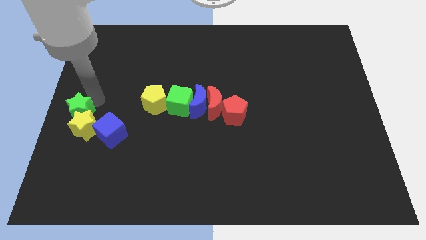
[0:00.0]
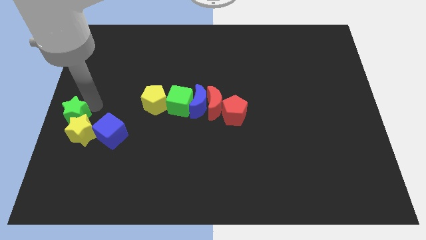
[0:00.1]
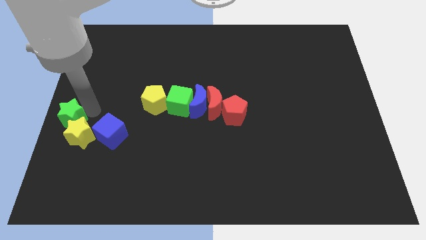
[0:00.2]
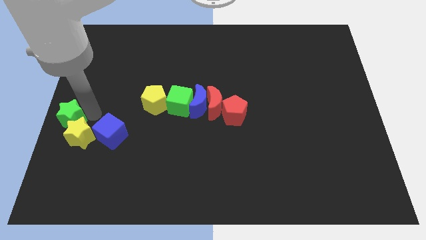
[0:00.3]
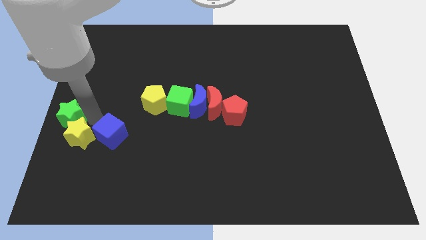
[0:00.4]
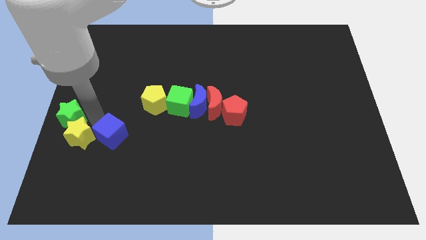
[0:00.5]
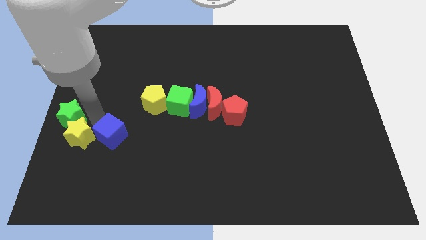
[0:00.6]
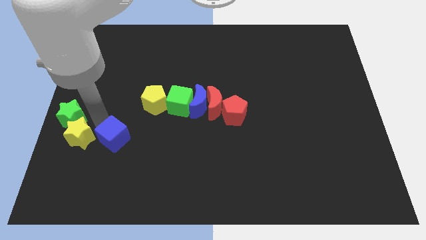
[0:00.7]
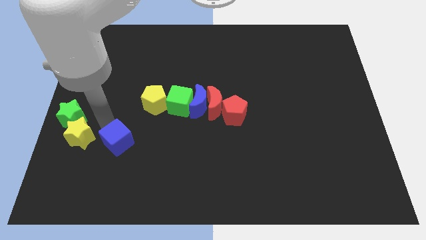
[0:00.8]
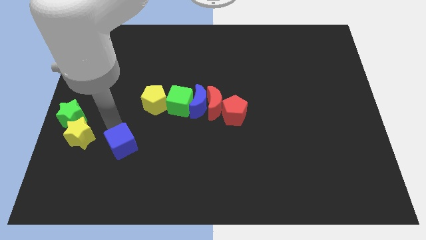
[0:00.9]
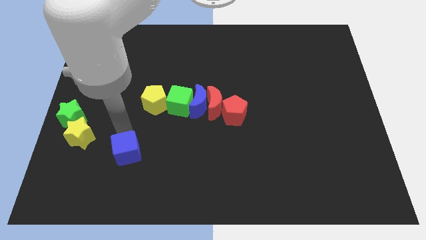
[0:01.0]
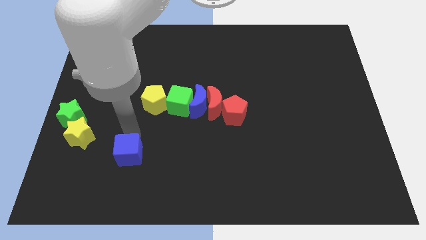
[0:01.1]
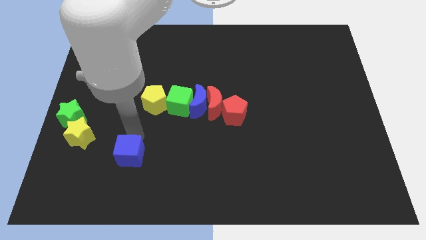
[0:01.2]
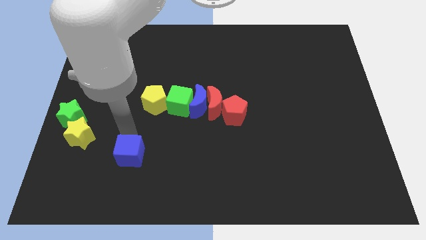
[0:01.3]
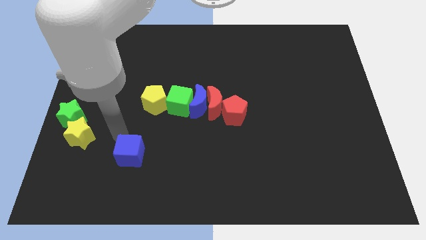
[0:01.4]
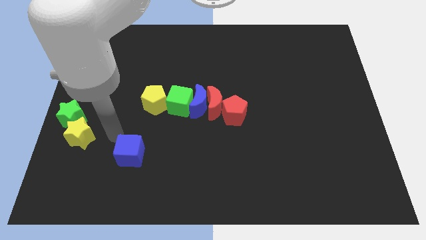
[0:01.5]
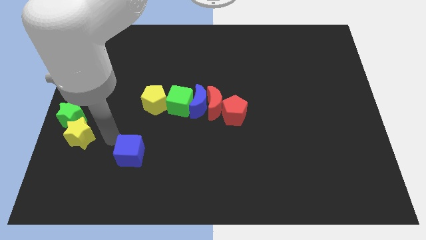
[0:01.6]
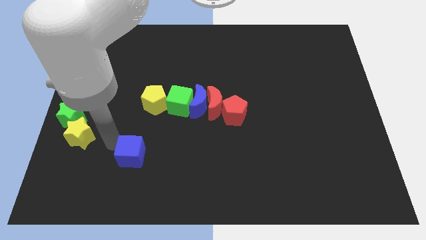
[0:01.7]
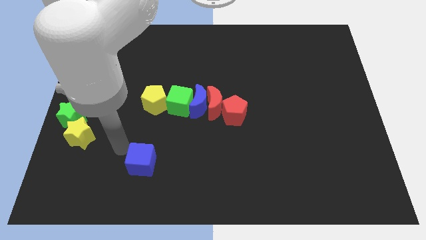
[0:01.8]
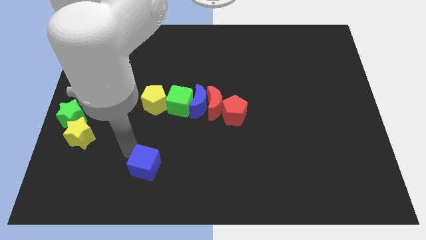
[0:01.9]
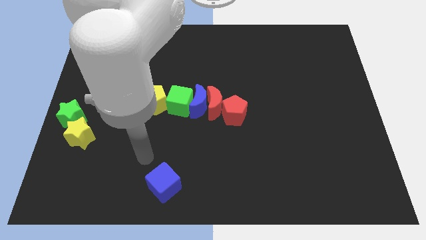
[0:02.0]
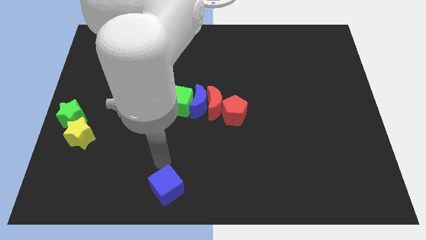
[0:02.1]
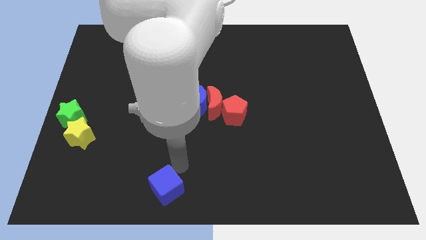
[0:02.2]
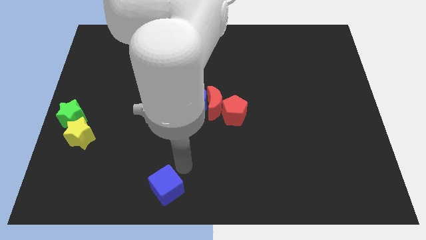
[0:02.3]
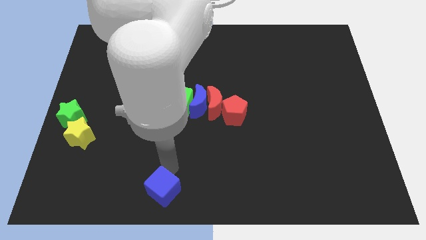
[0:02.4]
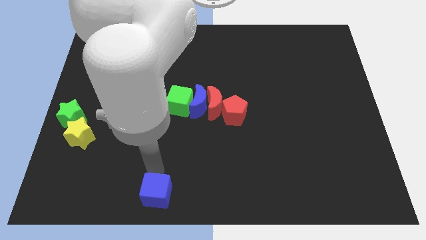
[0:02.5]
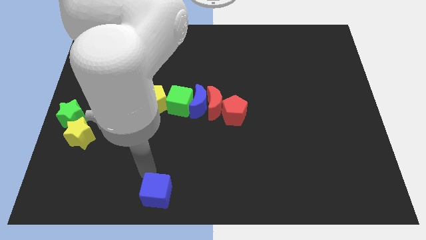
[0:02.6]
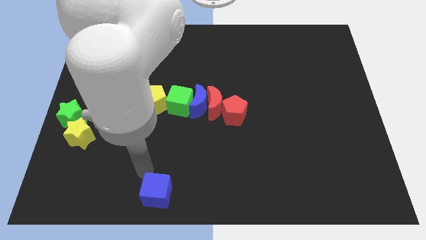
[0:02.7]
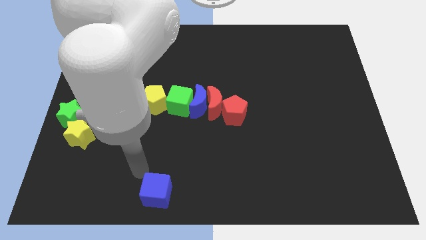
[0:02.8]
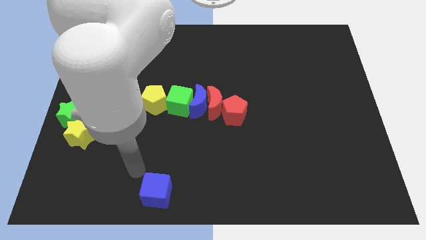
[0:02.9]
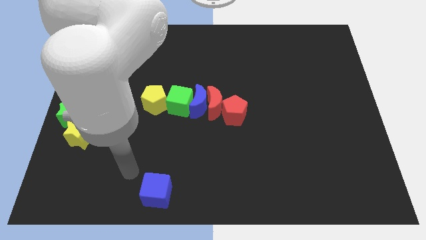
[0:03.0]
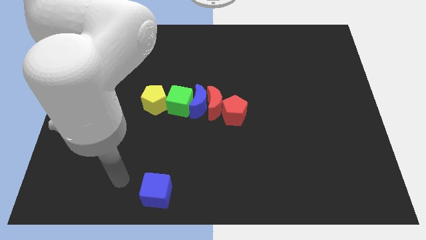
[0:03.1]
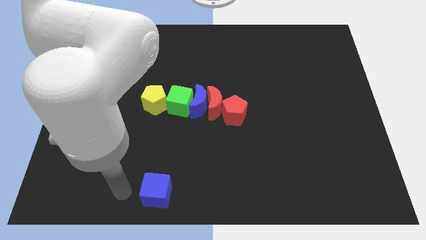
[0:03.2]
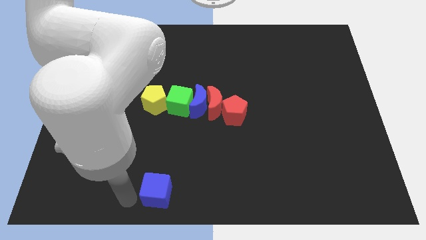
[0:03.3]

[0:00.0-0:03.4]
place blue cube to the bottom of green cube

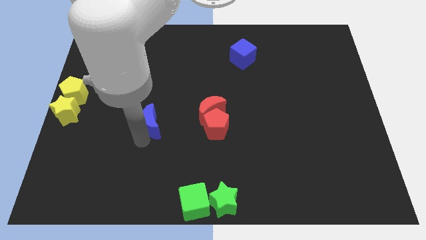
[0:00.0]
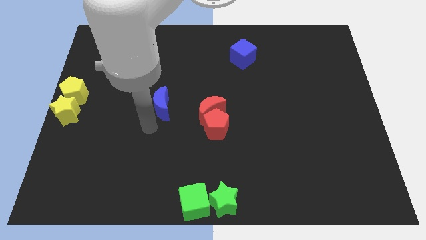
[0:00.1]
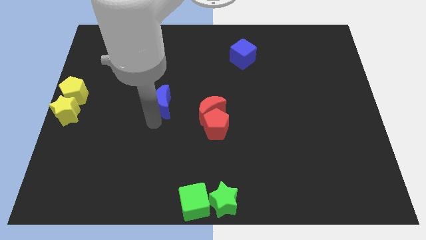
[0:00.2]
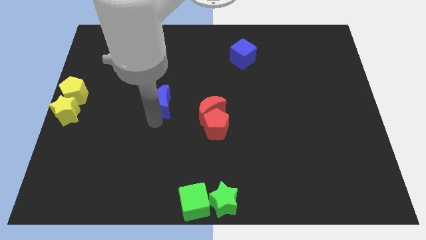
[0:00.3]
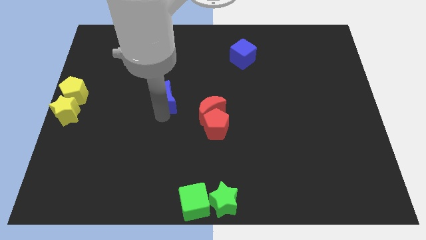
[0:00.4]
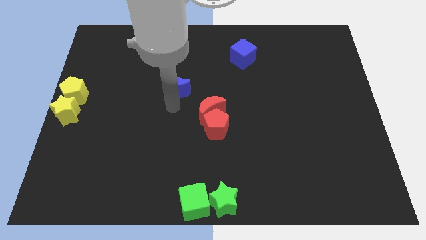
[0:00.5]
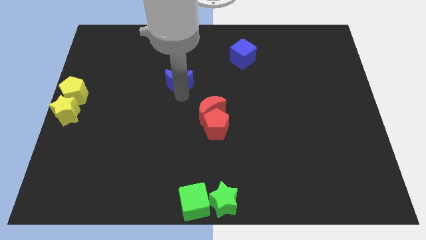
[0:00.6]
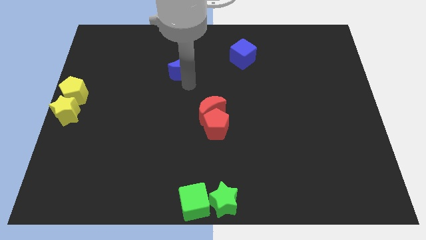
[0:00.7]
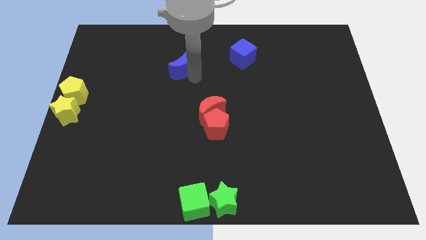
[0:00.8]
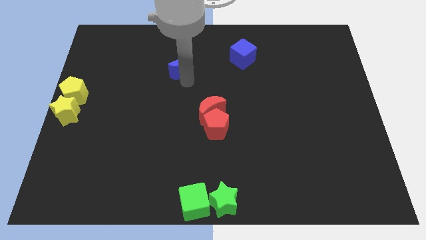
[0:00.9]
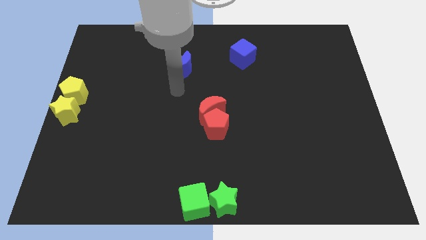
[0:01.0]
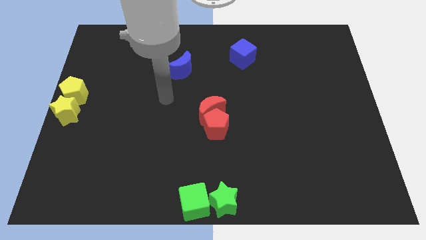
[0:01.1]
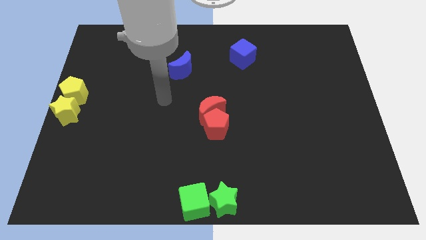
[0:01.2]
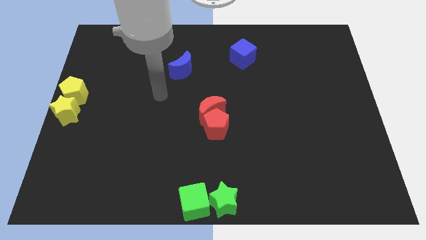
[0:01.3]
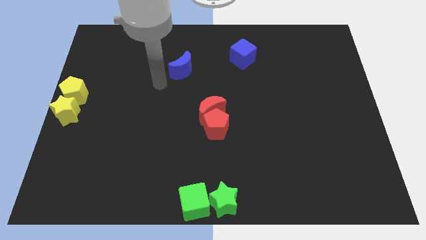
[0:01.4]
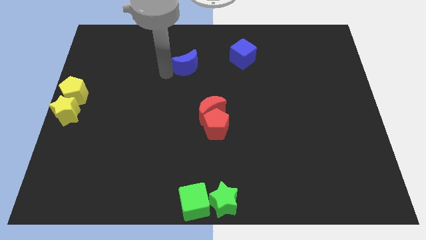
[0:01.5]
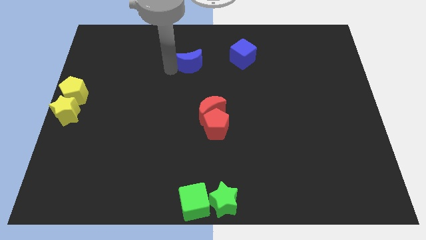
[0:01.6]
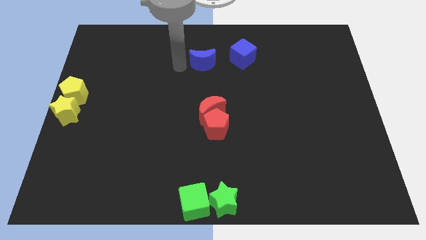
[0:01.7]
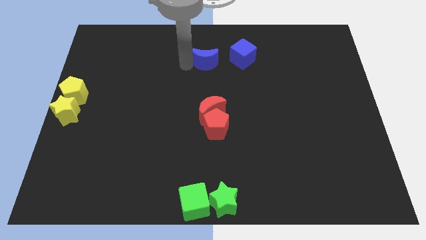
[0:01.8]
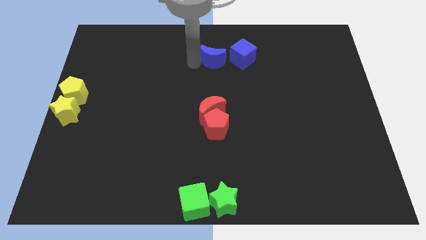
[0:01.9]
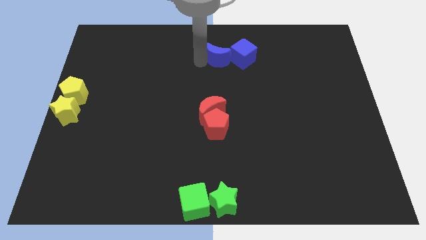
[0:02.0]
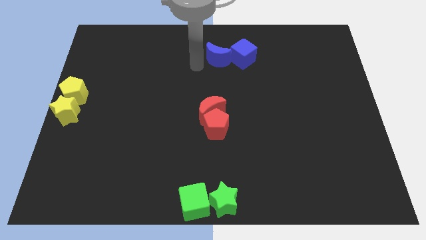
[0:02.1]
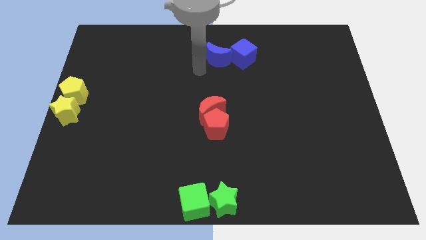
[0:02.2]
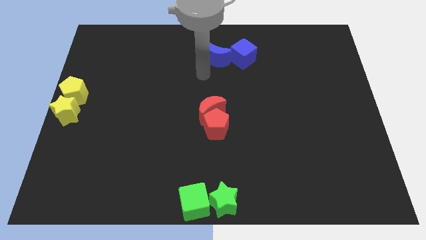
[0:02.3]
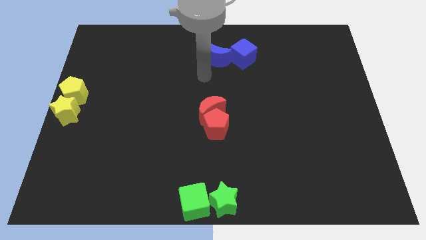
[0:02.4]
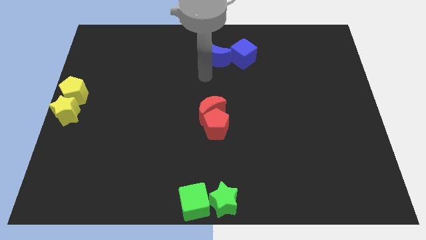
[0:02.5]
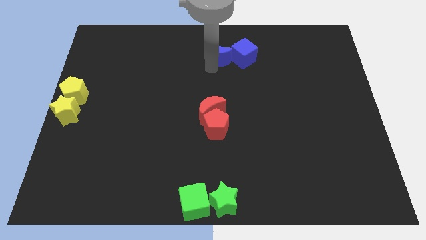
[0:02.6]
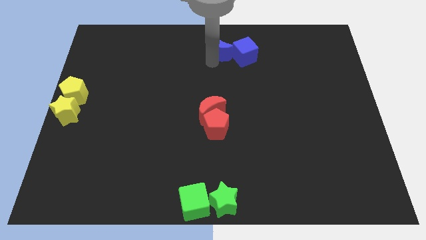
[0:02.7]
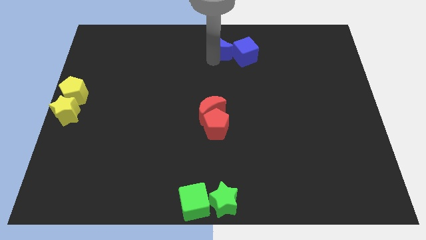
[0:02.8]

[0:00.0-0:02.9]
push the blue moon into the blue cube

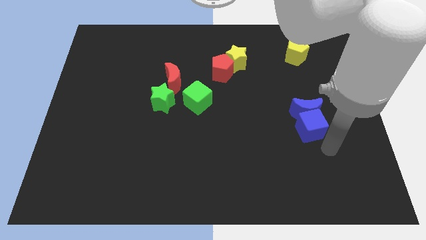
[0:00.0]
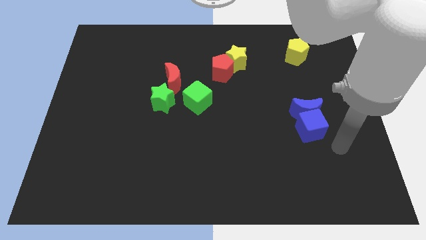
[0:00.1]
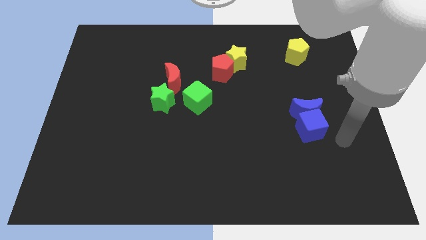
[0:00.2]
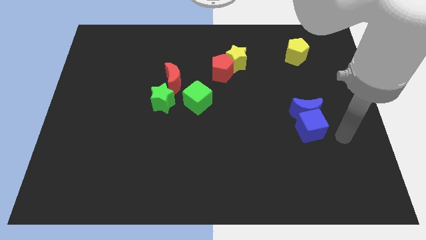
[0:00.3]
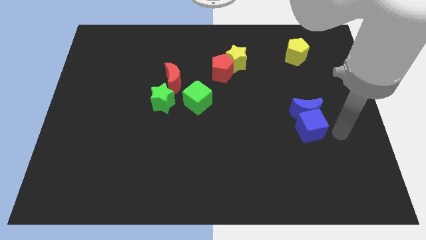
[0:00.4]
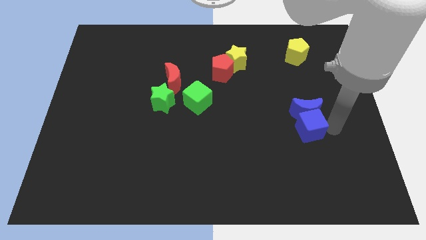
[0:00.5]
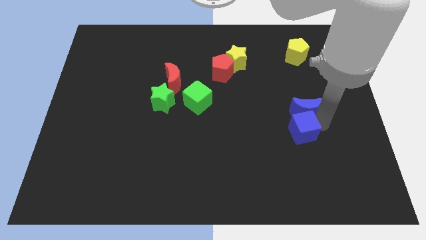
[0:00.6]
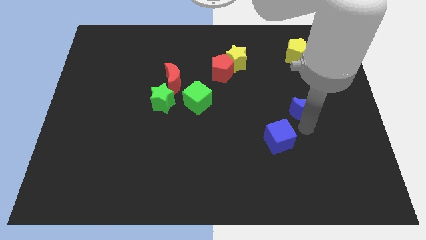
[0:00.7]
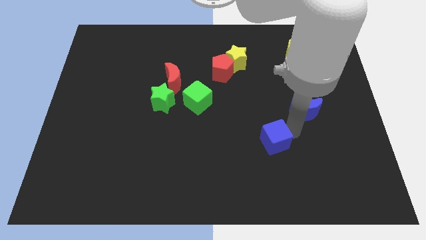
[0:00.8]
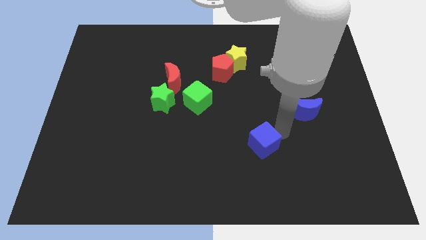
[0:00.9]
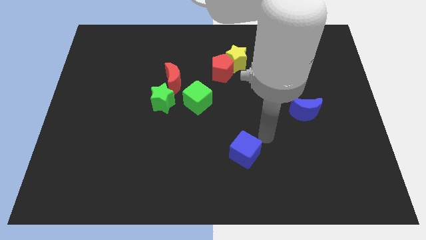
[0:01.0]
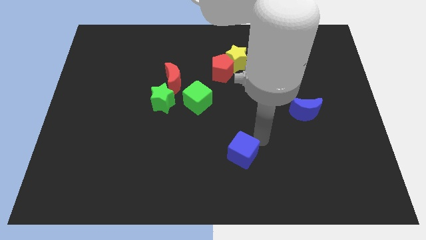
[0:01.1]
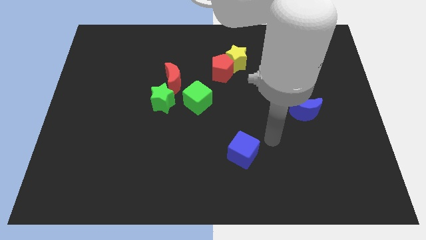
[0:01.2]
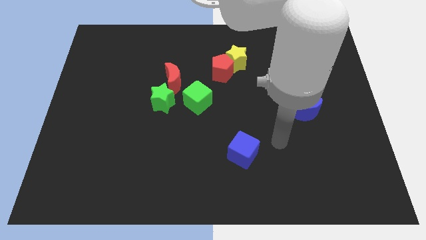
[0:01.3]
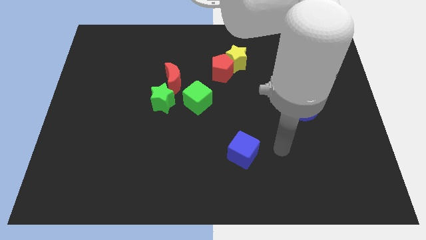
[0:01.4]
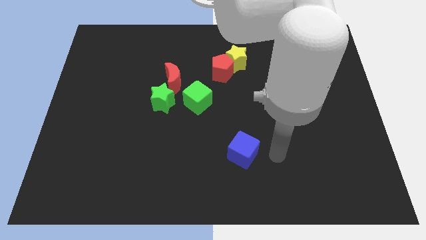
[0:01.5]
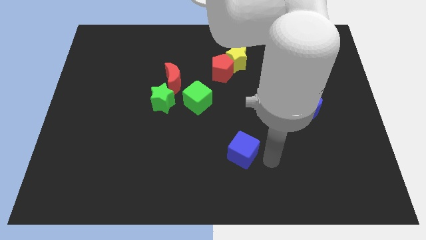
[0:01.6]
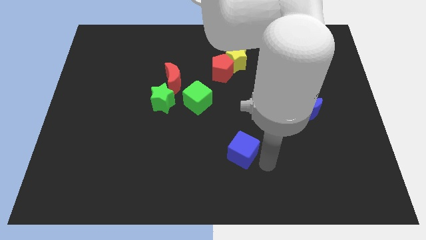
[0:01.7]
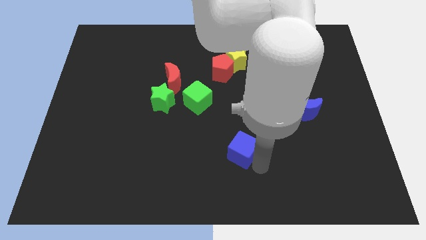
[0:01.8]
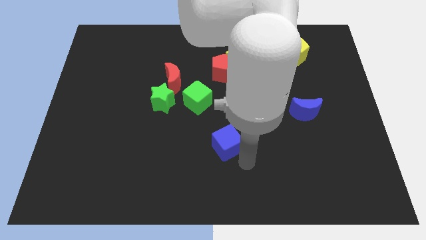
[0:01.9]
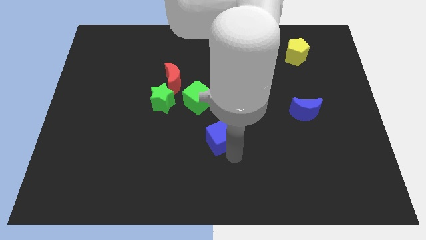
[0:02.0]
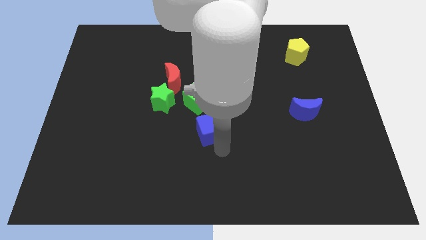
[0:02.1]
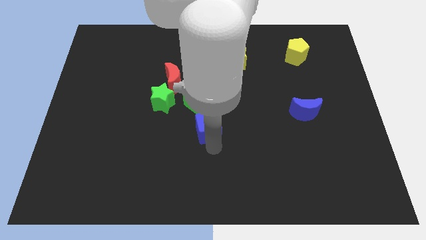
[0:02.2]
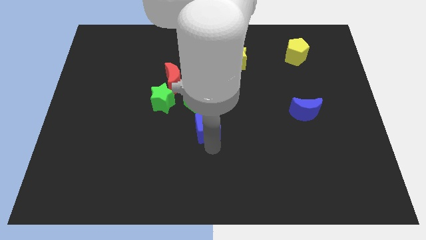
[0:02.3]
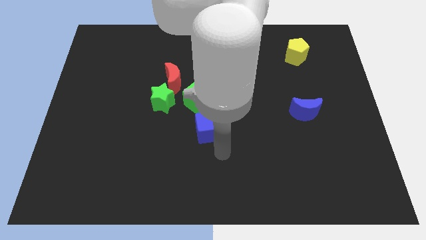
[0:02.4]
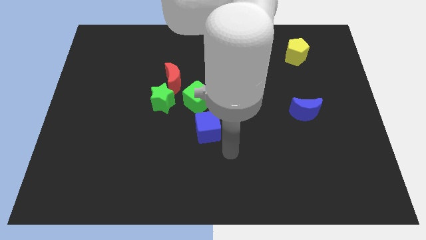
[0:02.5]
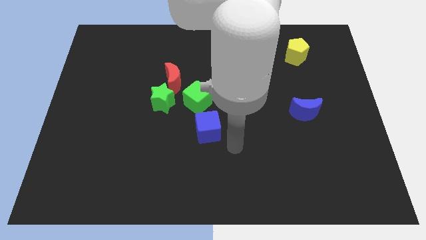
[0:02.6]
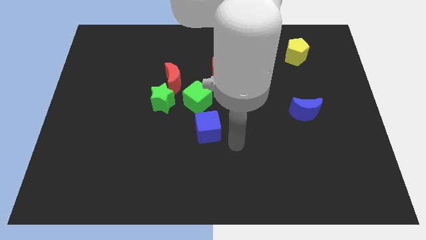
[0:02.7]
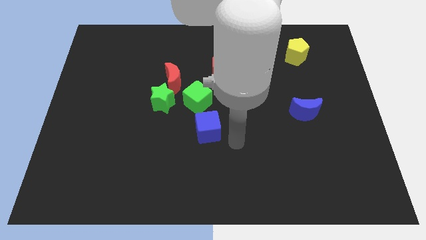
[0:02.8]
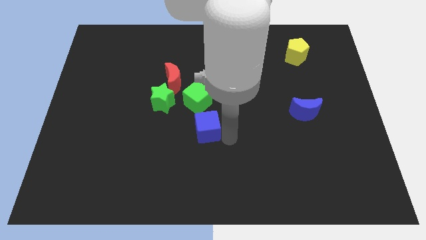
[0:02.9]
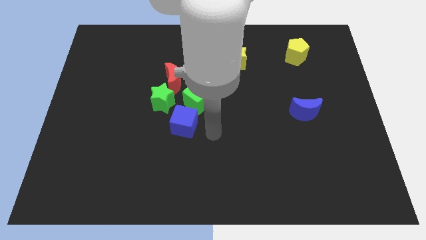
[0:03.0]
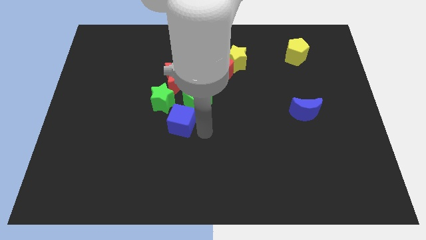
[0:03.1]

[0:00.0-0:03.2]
move the blue cube to the bottom of green cube
